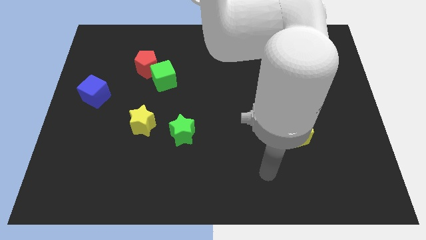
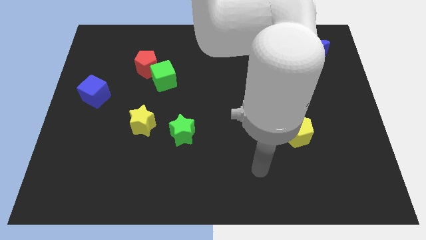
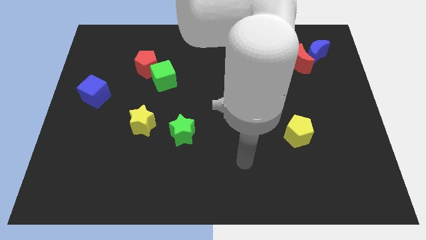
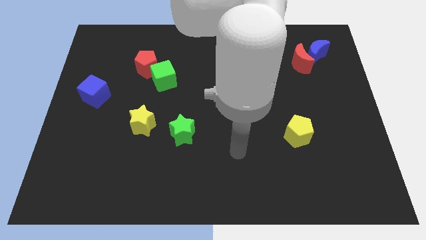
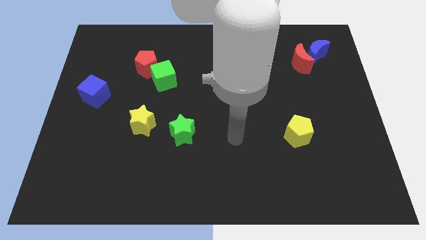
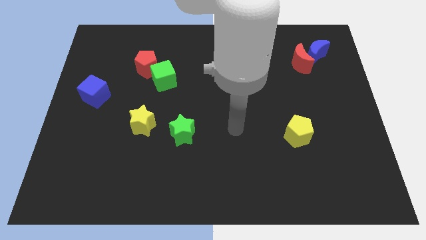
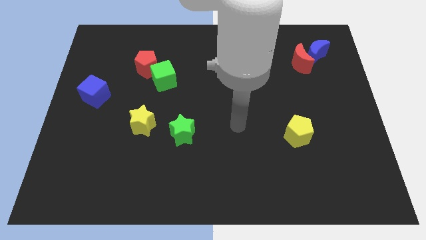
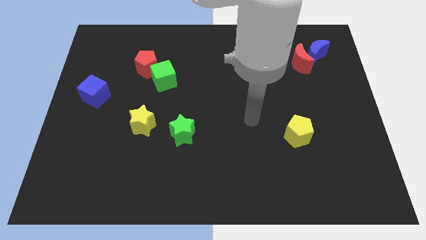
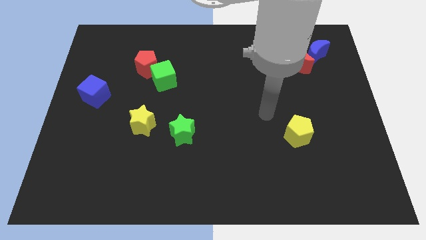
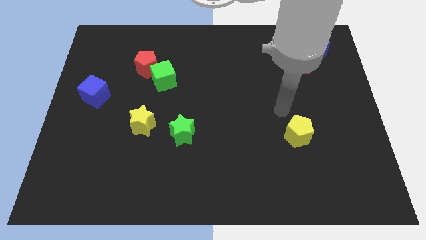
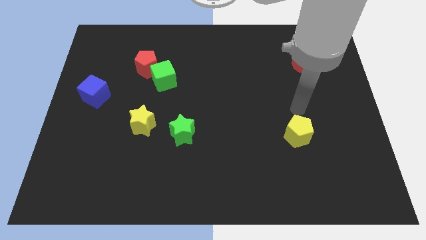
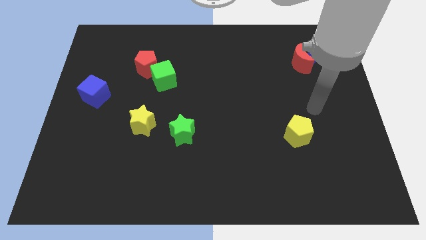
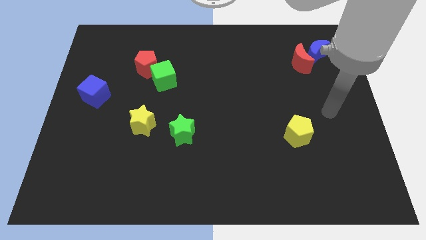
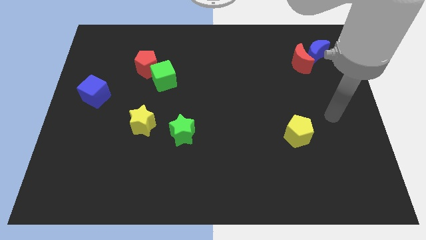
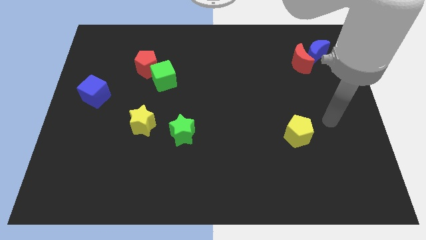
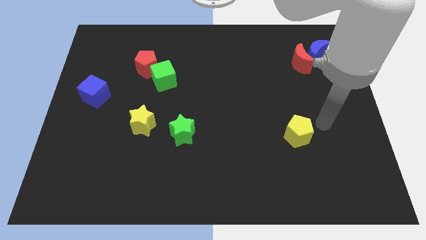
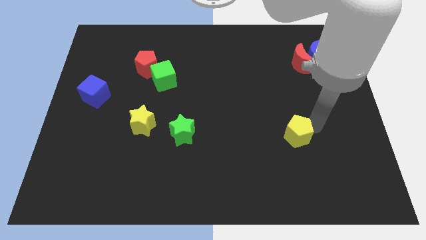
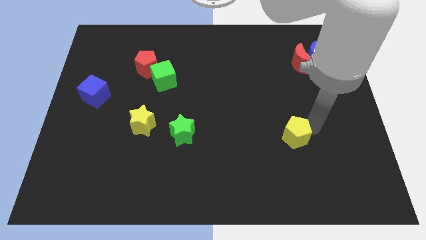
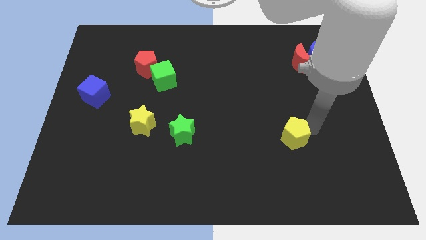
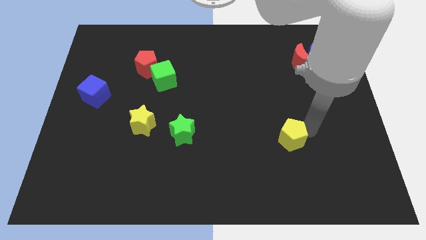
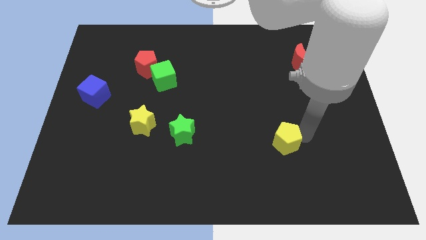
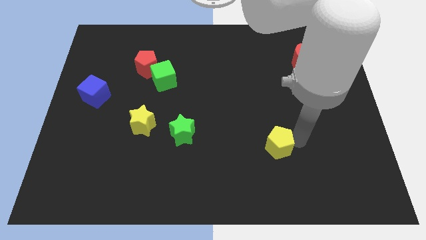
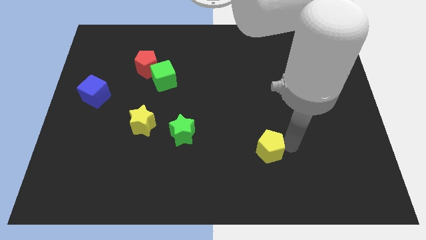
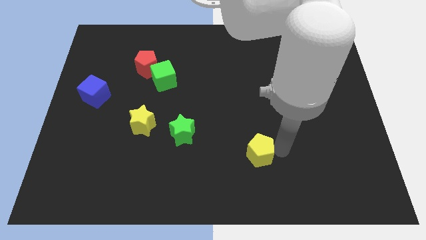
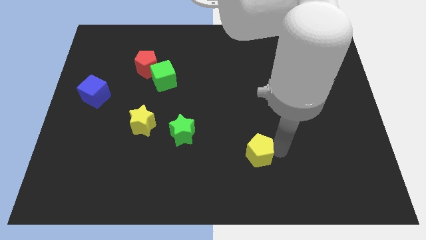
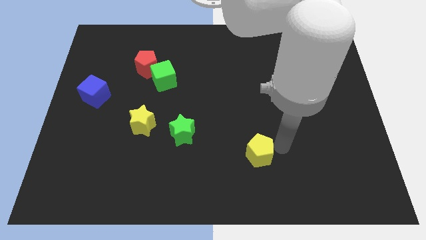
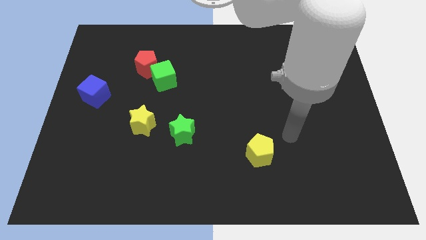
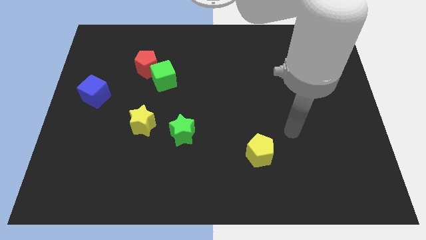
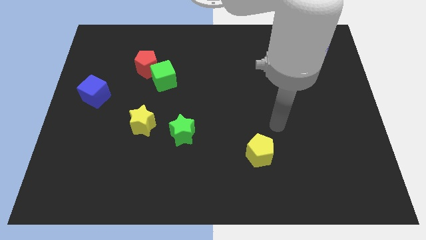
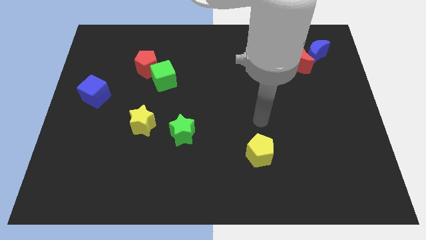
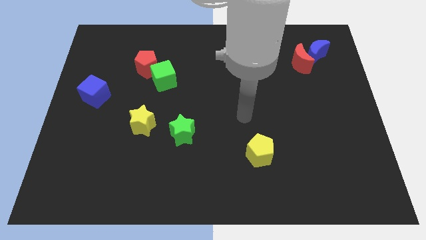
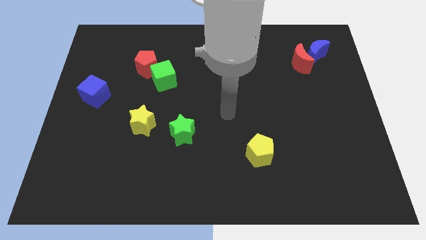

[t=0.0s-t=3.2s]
push yellow pentagon slightly downwards

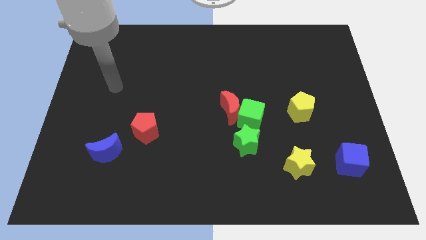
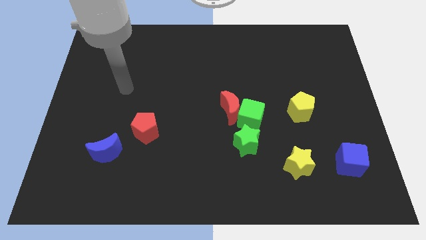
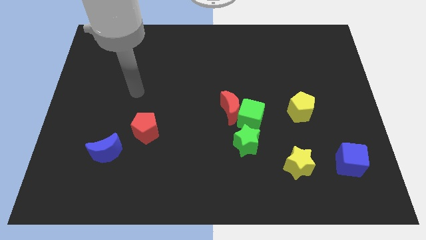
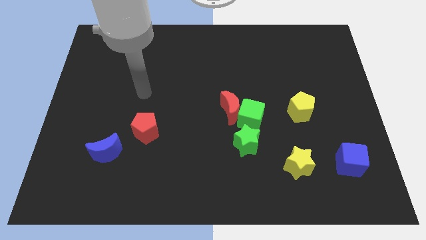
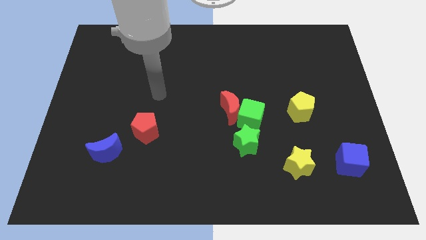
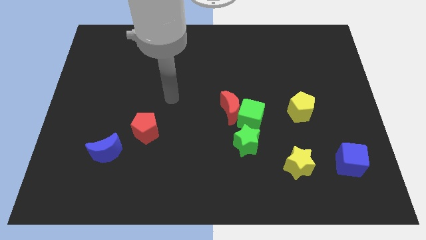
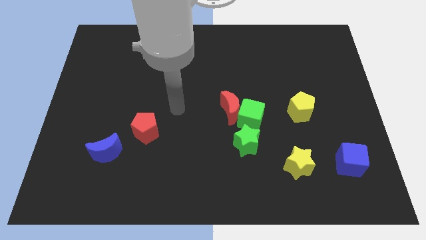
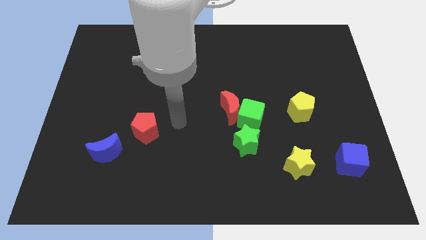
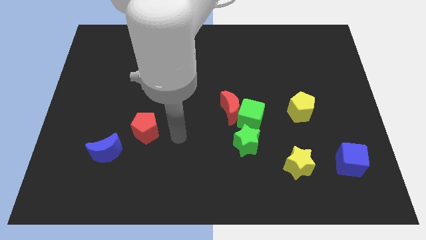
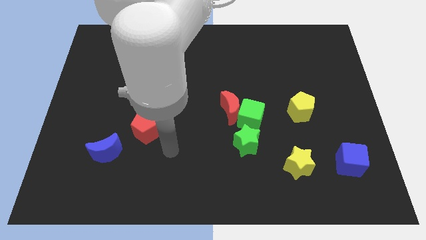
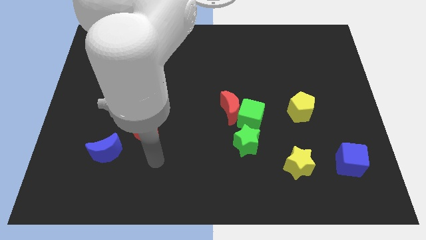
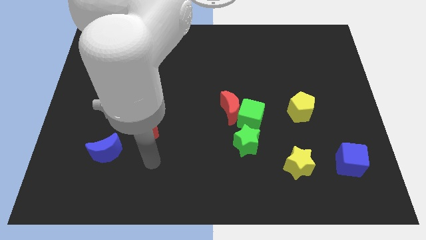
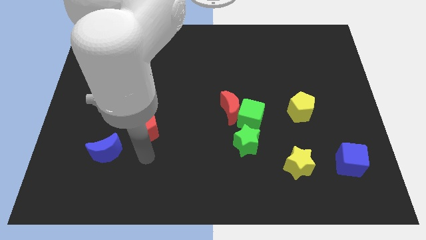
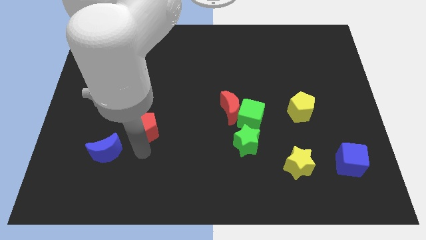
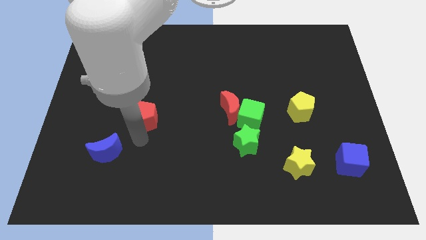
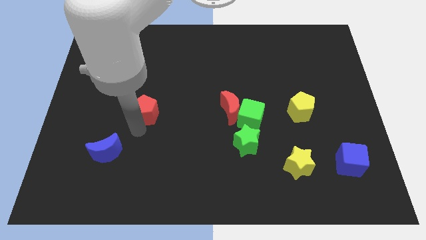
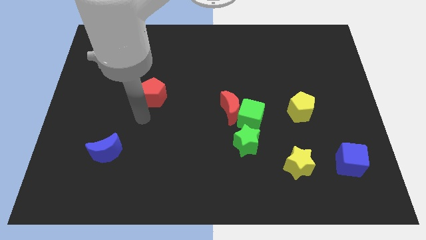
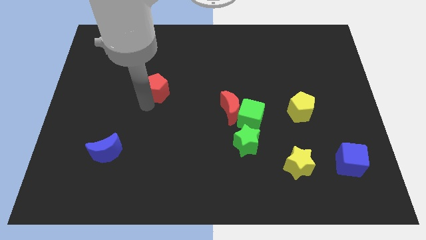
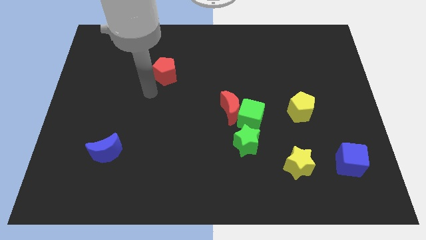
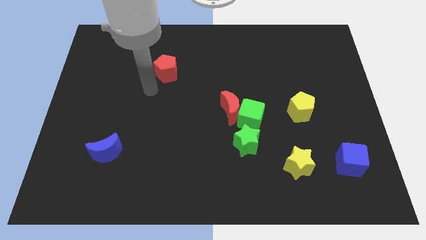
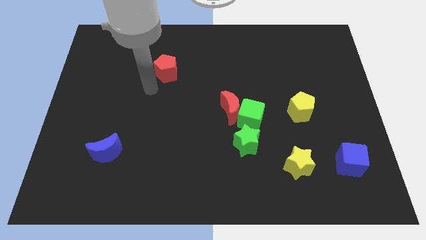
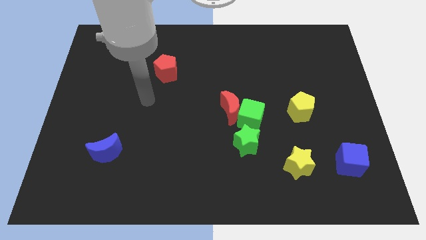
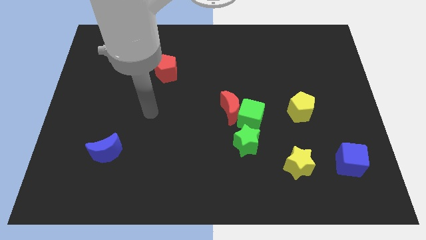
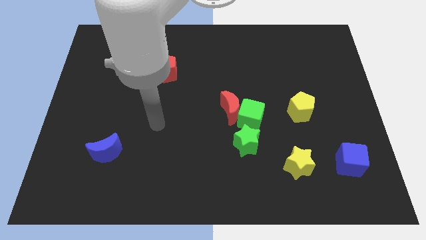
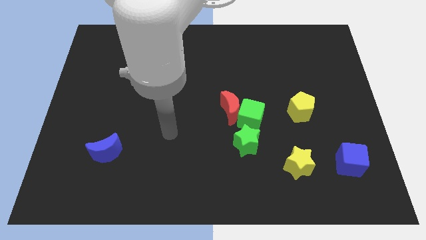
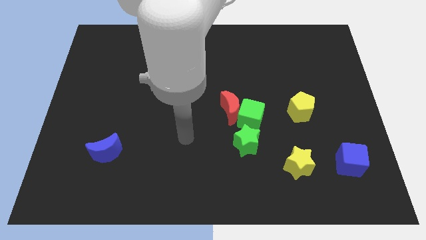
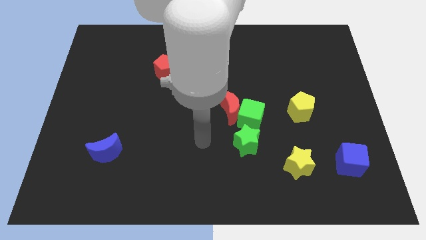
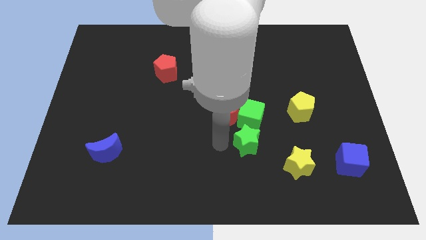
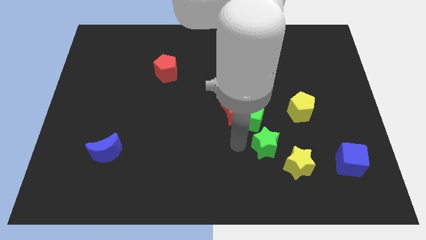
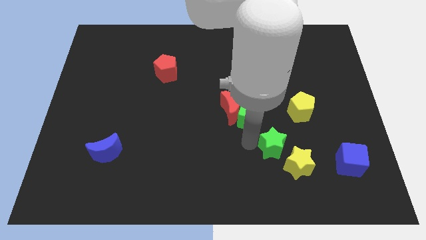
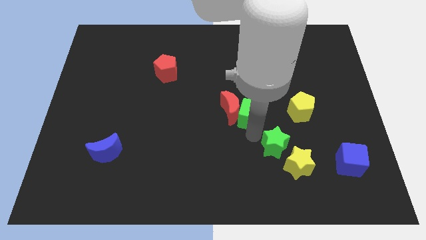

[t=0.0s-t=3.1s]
slide the red pentagon towards top side

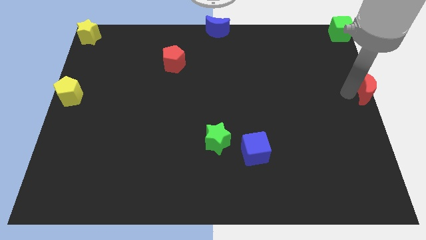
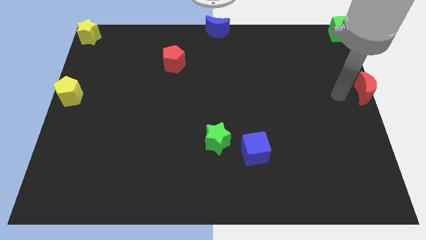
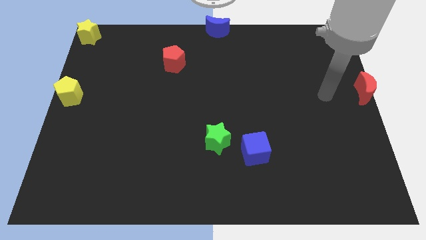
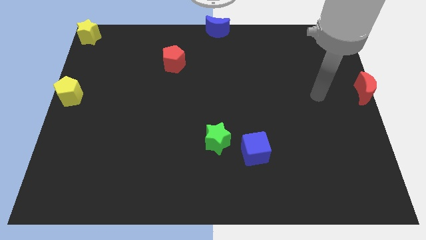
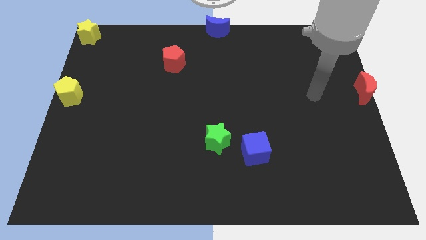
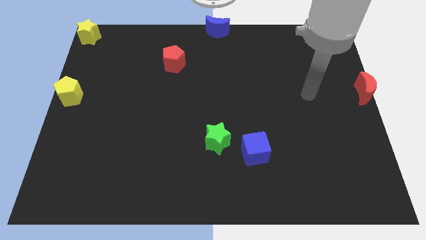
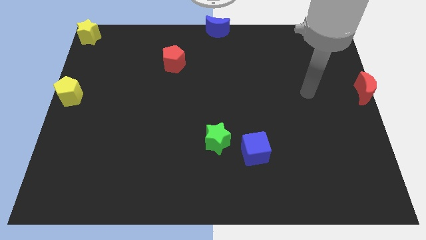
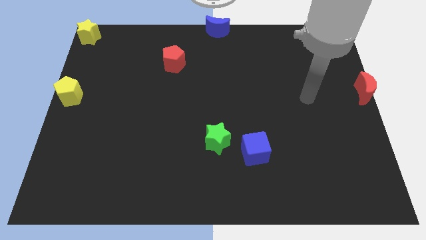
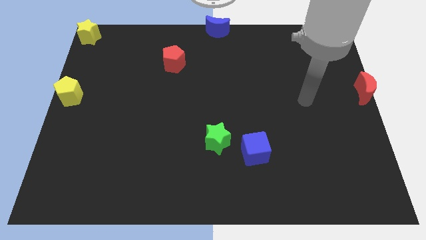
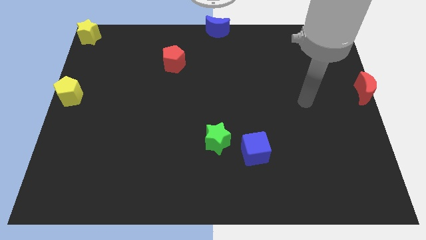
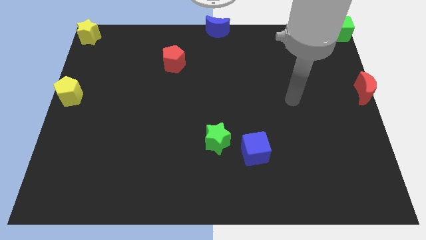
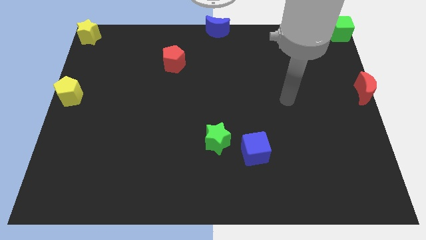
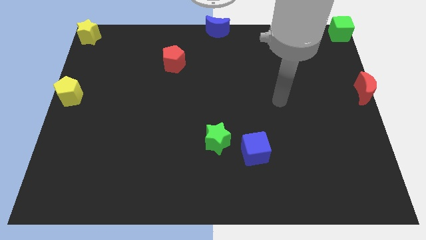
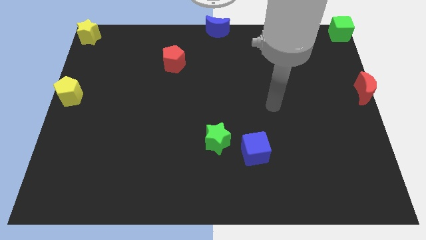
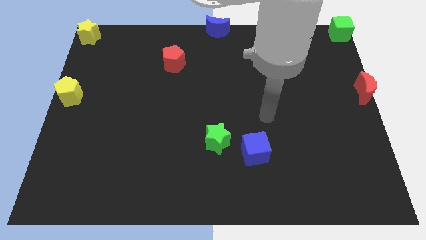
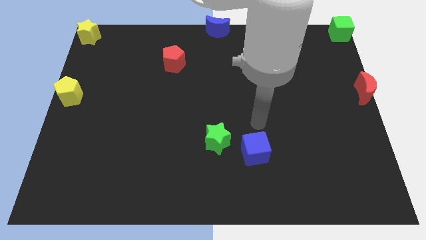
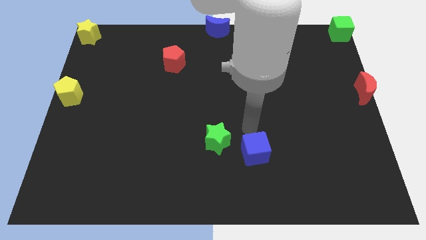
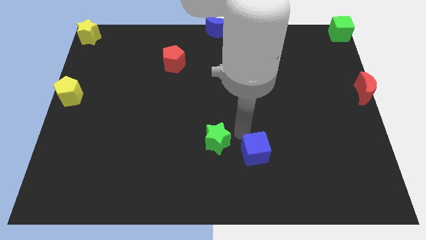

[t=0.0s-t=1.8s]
move your arm away from the red moon

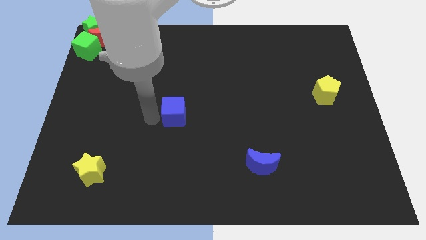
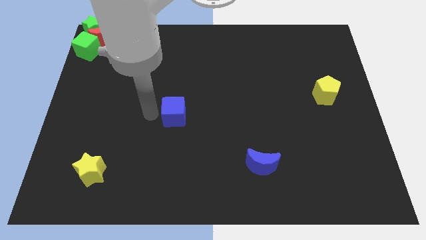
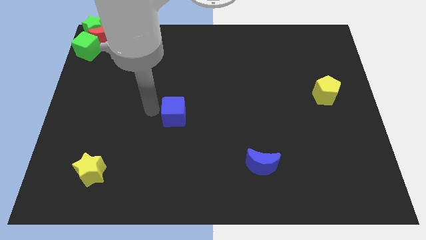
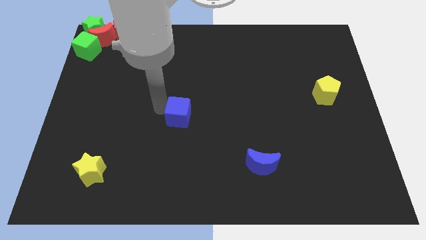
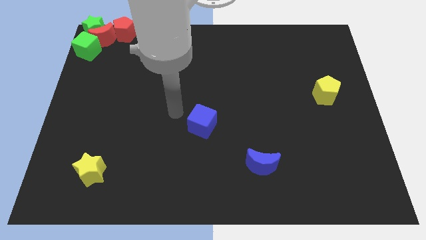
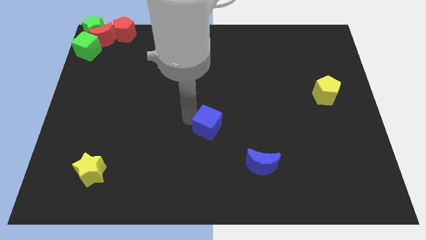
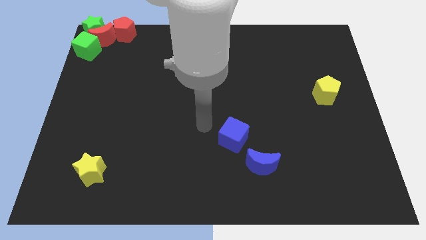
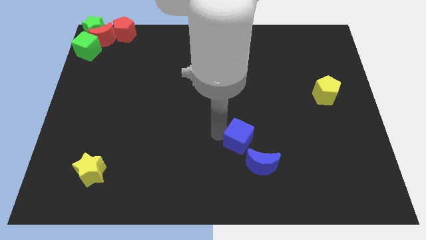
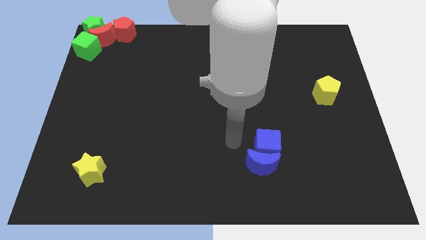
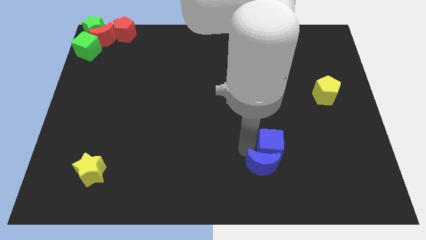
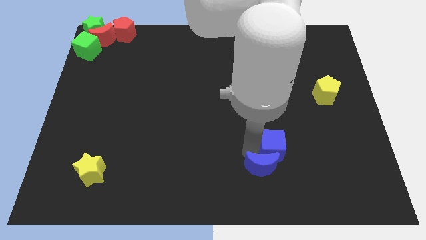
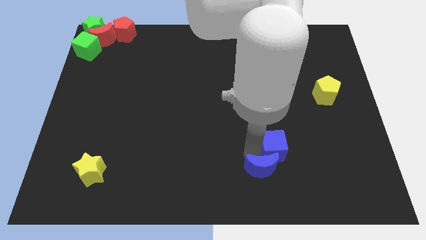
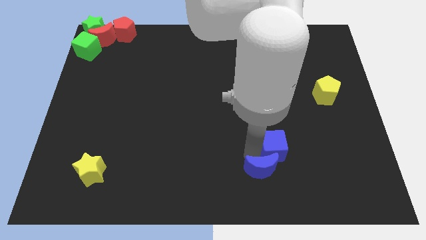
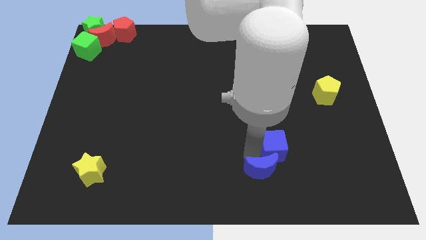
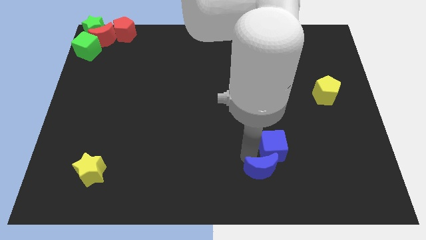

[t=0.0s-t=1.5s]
drag blue cube above blue moon
